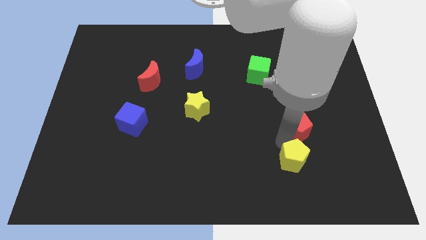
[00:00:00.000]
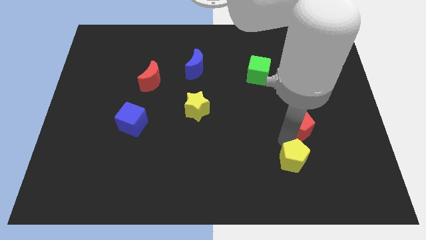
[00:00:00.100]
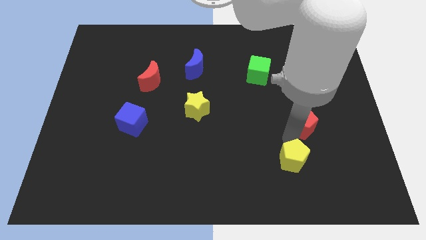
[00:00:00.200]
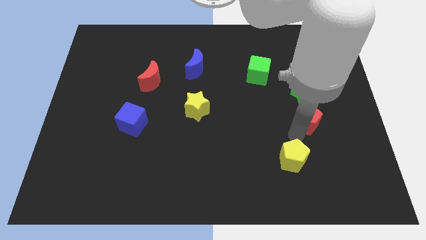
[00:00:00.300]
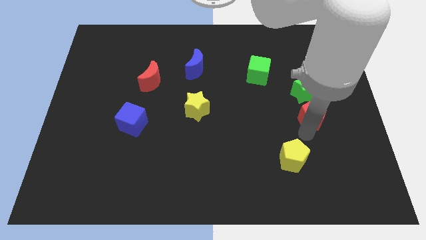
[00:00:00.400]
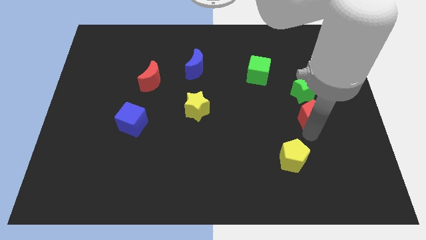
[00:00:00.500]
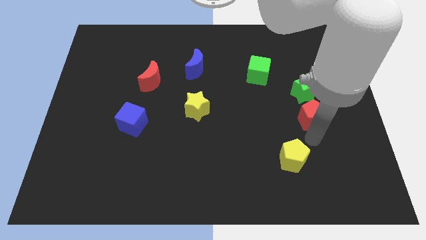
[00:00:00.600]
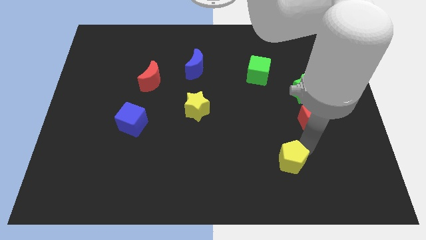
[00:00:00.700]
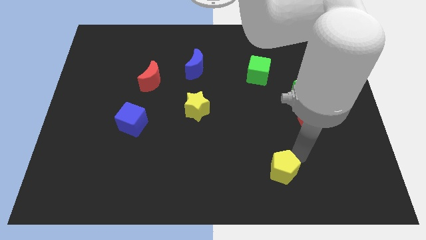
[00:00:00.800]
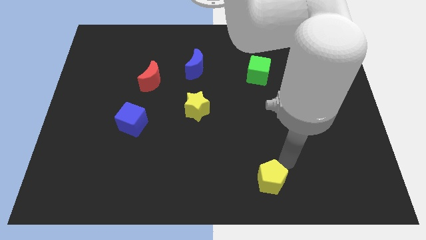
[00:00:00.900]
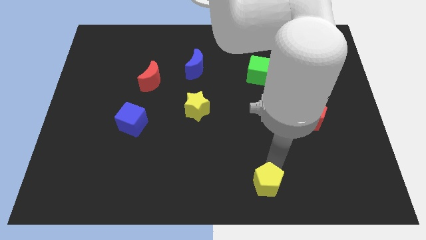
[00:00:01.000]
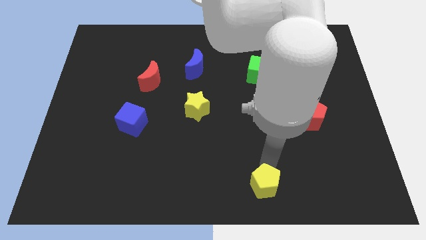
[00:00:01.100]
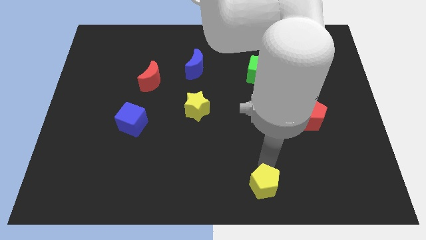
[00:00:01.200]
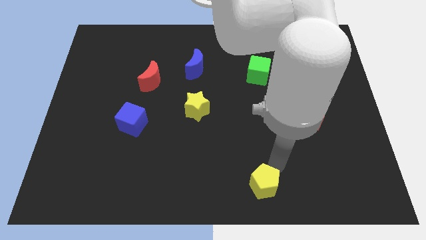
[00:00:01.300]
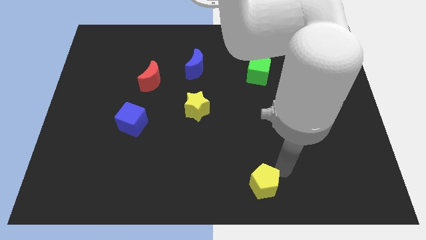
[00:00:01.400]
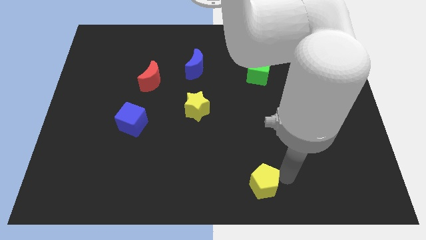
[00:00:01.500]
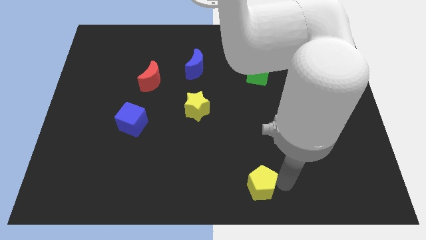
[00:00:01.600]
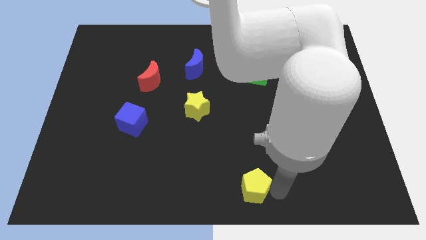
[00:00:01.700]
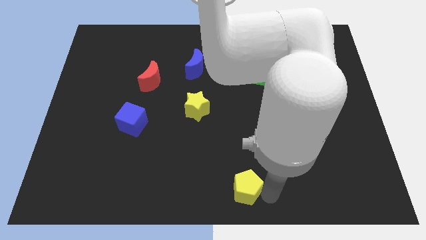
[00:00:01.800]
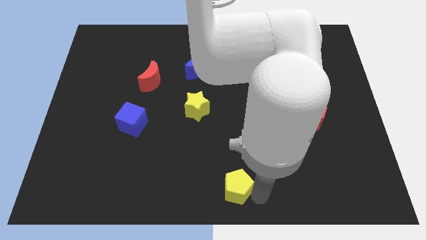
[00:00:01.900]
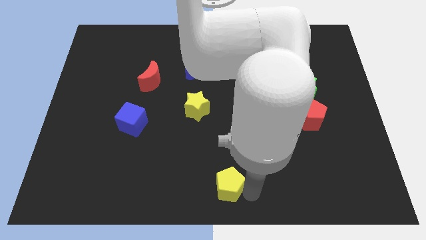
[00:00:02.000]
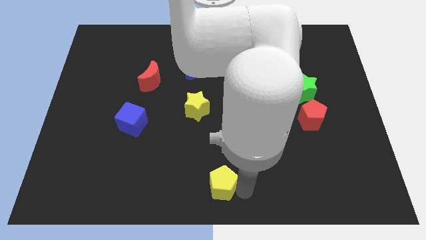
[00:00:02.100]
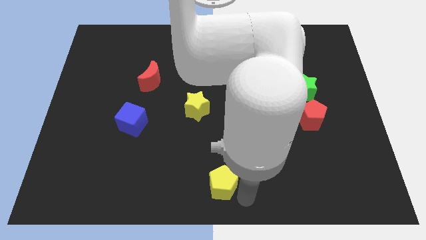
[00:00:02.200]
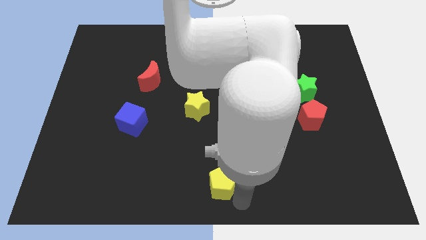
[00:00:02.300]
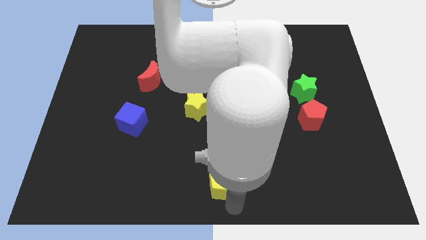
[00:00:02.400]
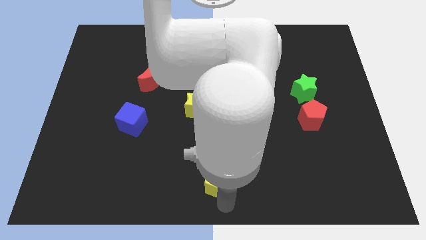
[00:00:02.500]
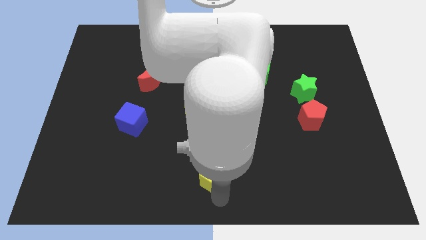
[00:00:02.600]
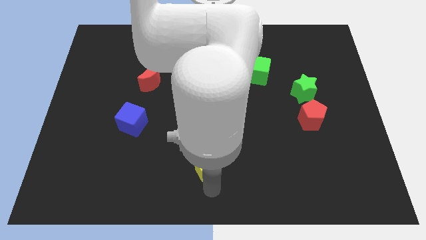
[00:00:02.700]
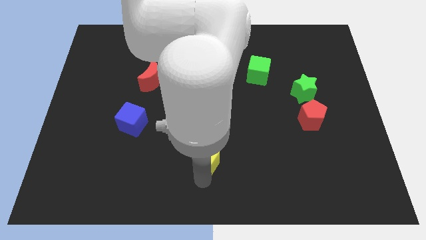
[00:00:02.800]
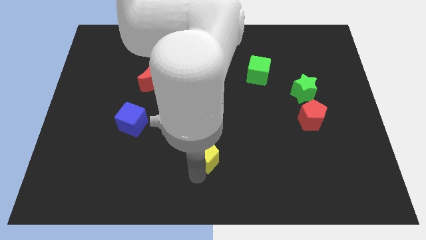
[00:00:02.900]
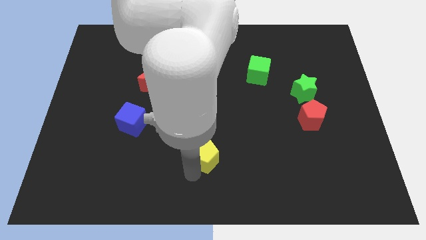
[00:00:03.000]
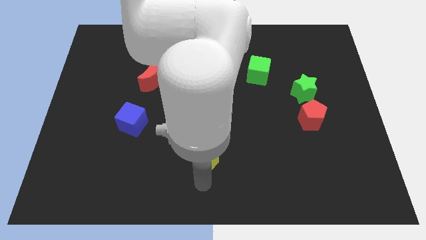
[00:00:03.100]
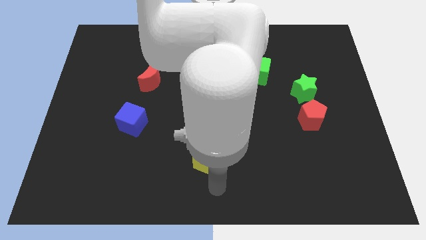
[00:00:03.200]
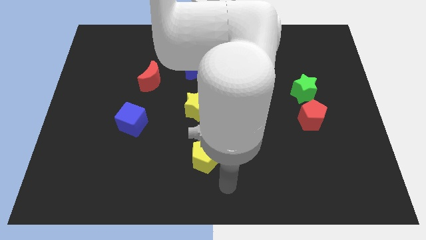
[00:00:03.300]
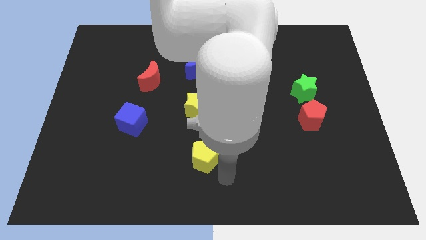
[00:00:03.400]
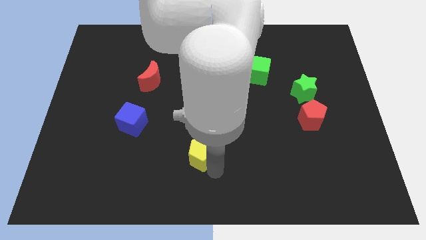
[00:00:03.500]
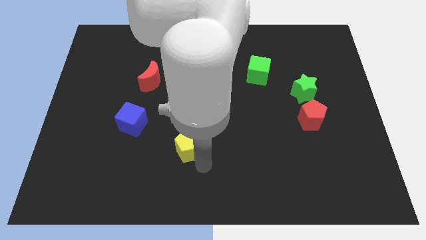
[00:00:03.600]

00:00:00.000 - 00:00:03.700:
place the yellow pentagon below the yellow star

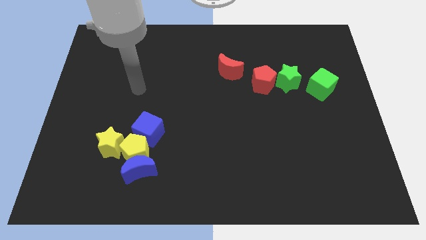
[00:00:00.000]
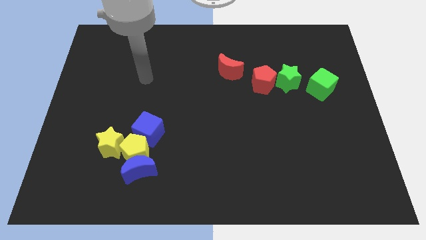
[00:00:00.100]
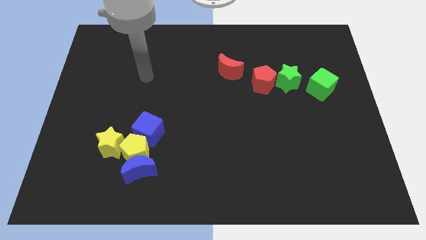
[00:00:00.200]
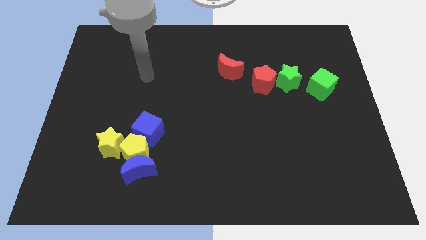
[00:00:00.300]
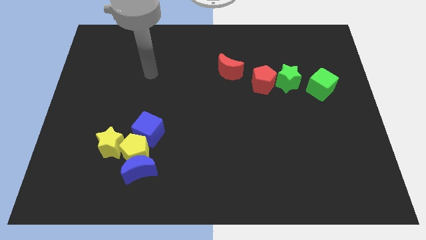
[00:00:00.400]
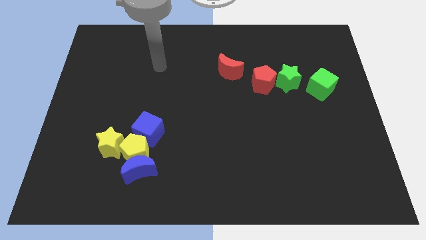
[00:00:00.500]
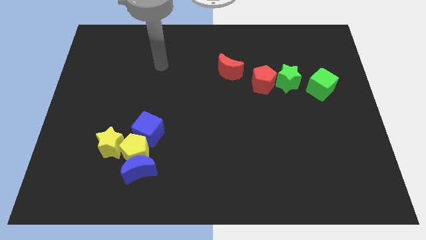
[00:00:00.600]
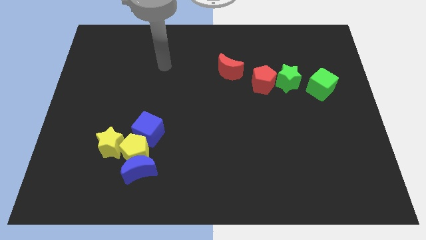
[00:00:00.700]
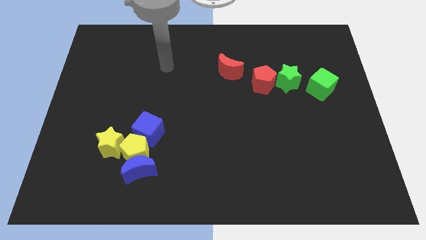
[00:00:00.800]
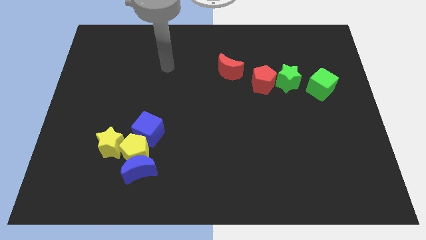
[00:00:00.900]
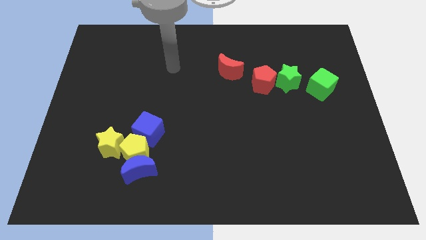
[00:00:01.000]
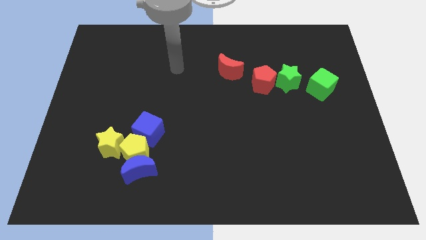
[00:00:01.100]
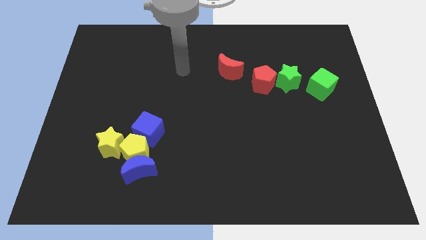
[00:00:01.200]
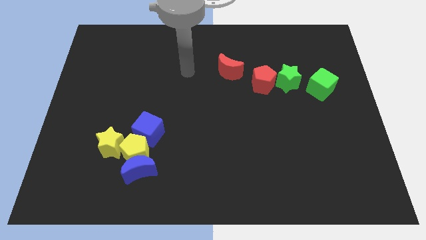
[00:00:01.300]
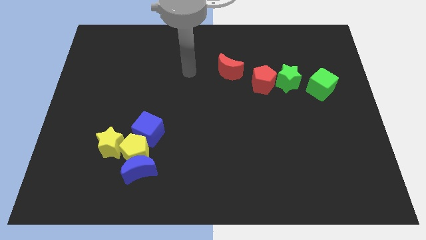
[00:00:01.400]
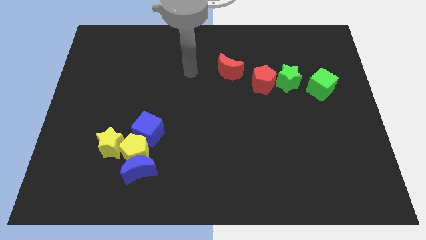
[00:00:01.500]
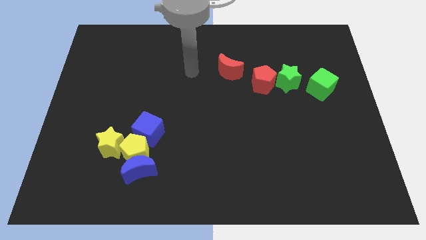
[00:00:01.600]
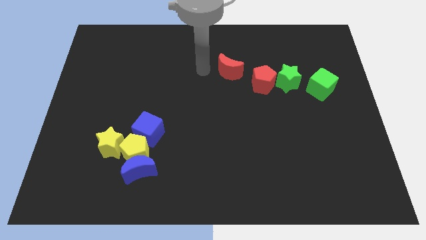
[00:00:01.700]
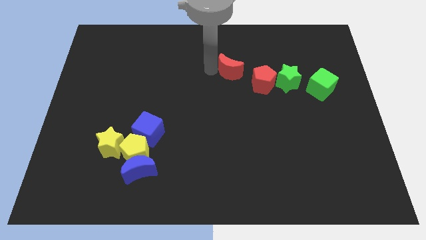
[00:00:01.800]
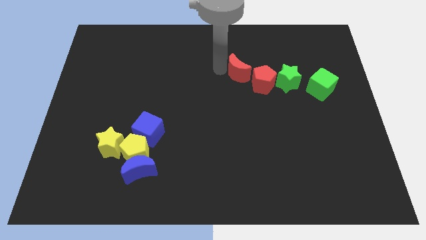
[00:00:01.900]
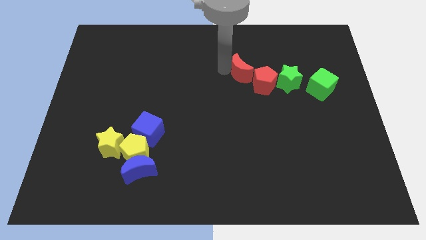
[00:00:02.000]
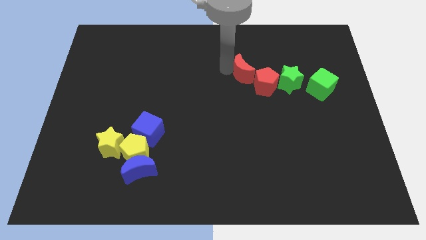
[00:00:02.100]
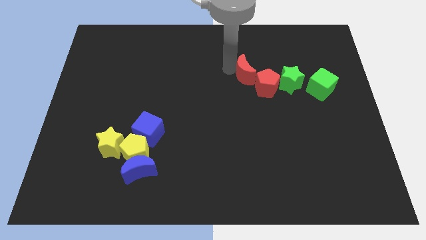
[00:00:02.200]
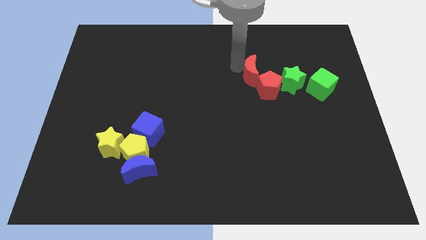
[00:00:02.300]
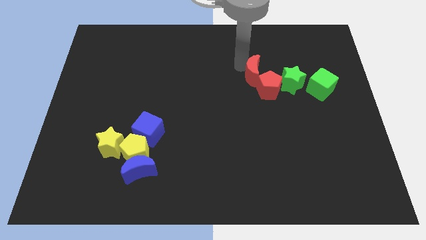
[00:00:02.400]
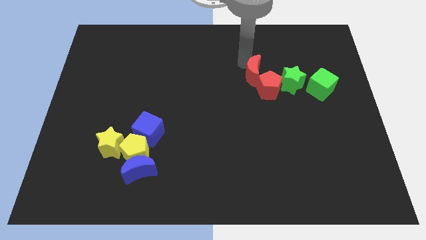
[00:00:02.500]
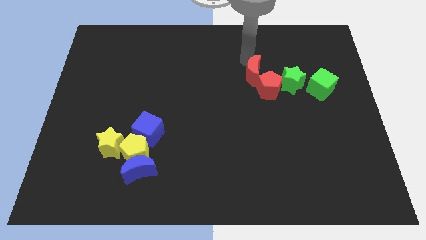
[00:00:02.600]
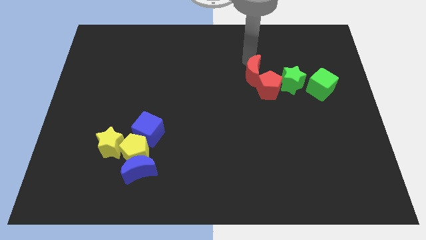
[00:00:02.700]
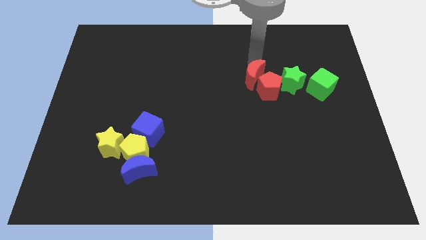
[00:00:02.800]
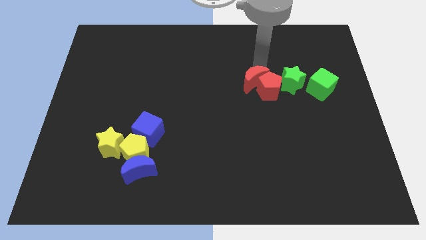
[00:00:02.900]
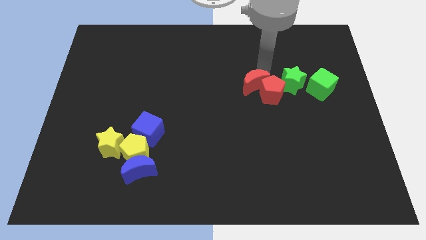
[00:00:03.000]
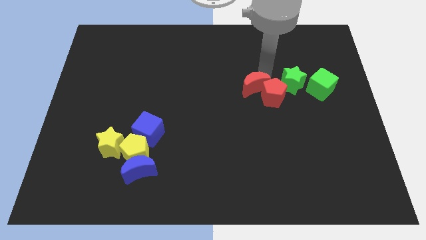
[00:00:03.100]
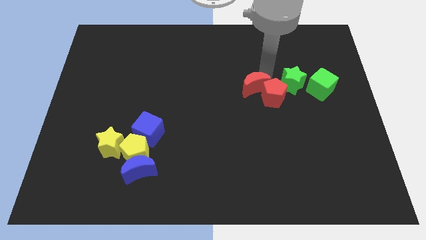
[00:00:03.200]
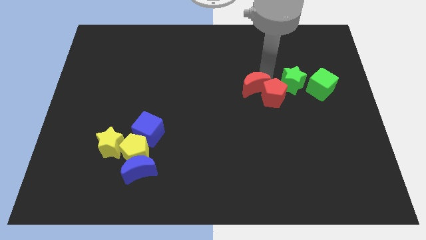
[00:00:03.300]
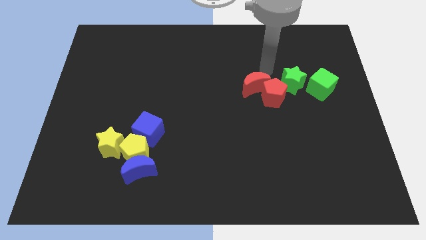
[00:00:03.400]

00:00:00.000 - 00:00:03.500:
push the red crescent into the top side of the red pentagon

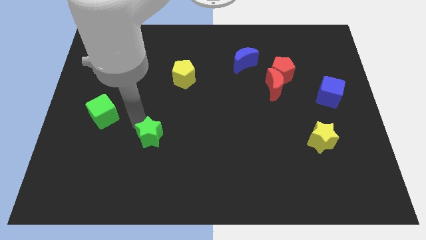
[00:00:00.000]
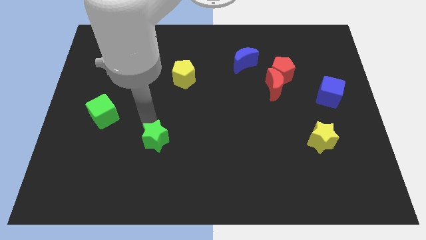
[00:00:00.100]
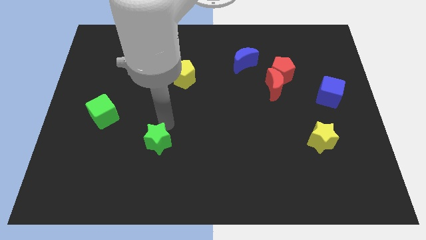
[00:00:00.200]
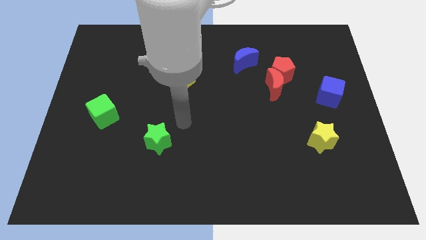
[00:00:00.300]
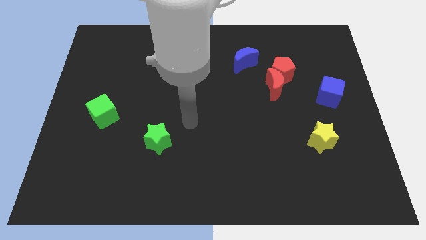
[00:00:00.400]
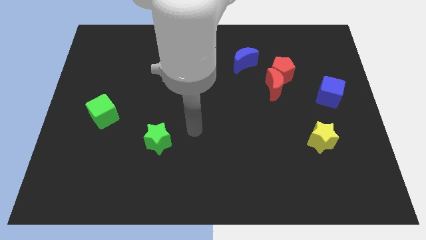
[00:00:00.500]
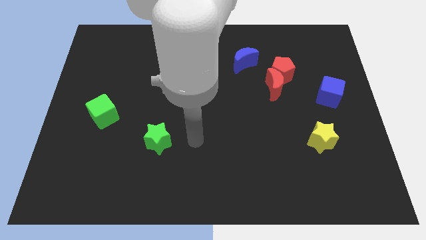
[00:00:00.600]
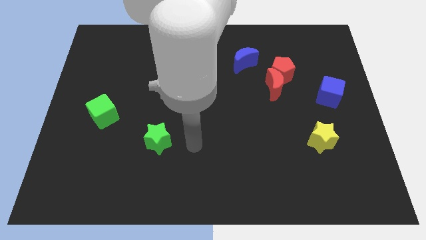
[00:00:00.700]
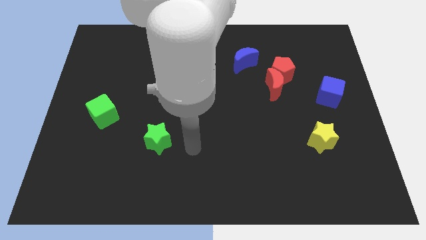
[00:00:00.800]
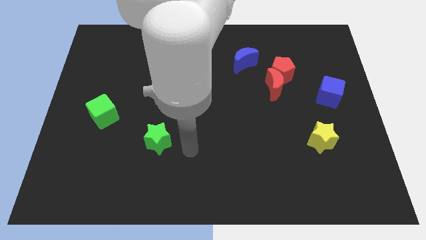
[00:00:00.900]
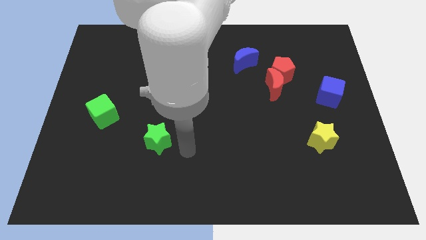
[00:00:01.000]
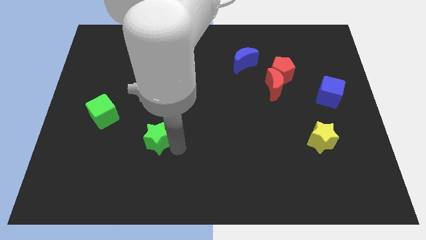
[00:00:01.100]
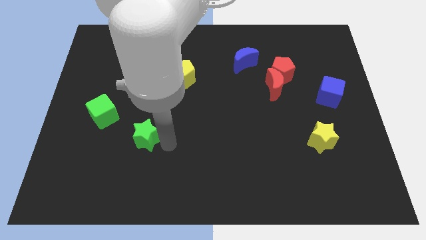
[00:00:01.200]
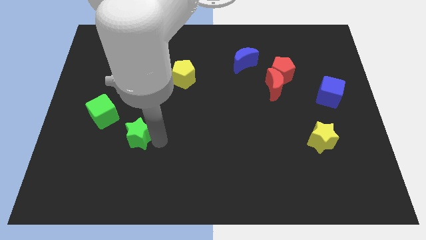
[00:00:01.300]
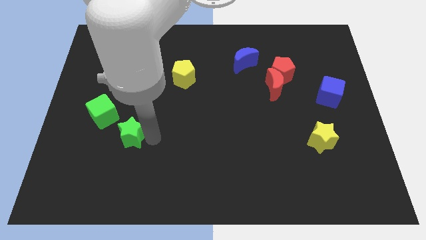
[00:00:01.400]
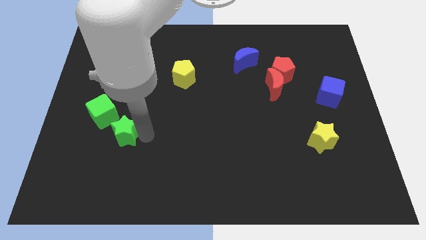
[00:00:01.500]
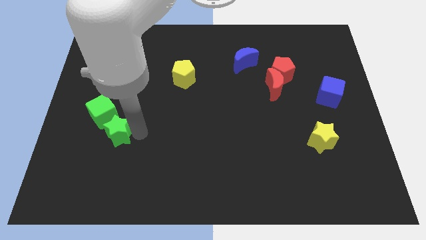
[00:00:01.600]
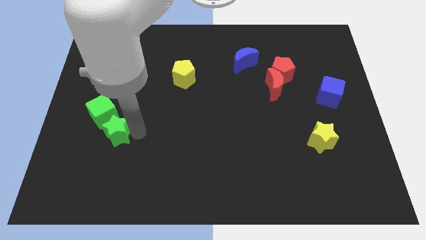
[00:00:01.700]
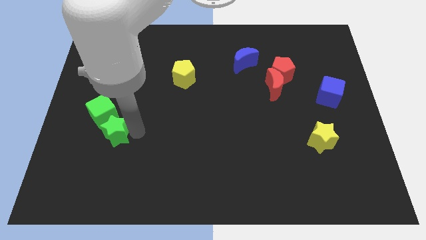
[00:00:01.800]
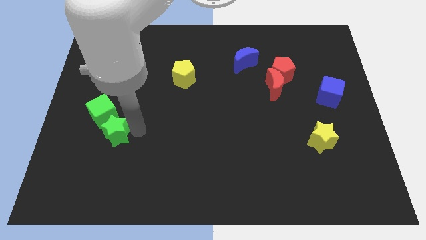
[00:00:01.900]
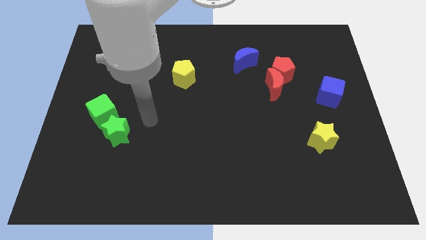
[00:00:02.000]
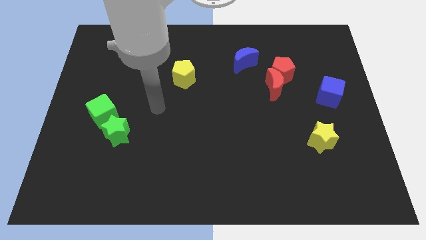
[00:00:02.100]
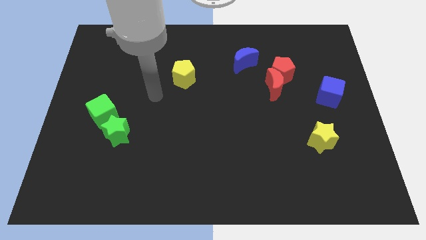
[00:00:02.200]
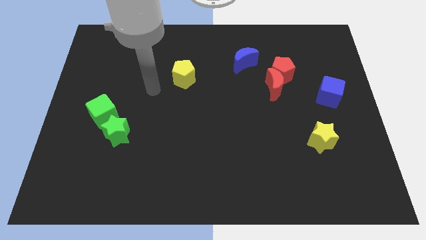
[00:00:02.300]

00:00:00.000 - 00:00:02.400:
push the green star to the left of the board near to the green cube
